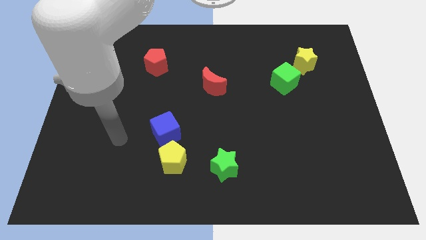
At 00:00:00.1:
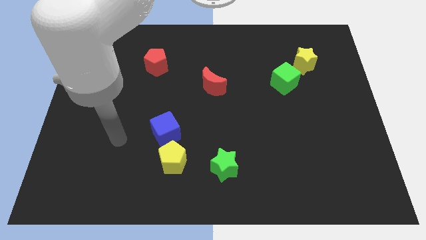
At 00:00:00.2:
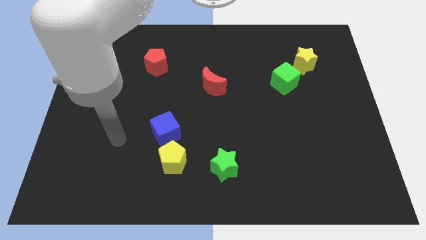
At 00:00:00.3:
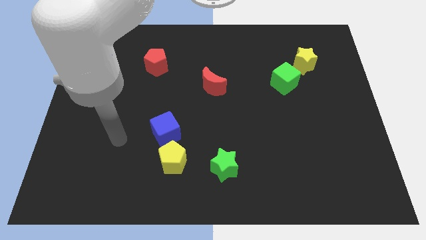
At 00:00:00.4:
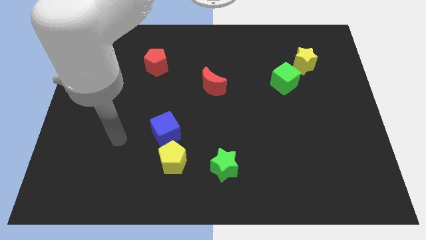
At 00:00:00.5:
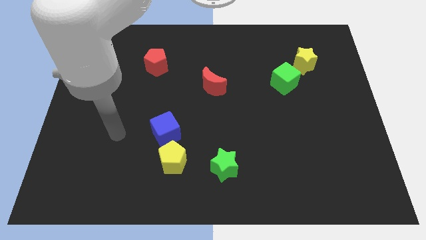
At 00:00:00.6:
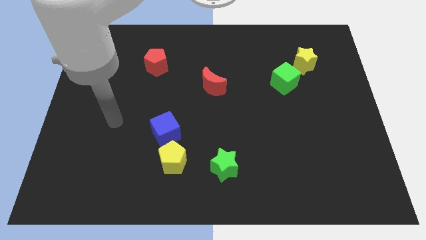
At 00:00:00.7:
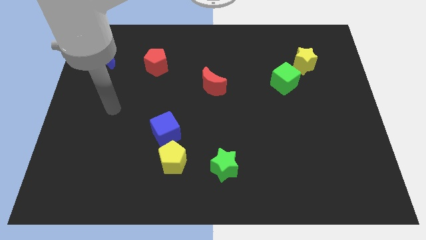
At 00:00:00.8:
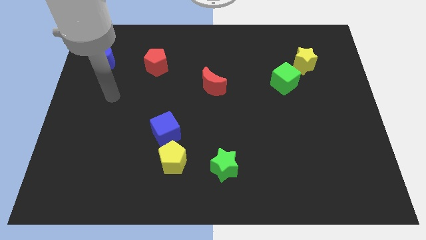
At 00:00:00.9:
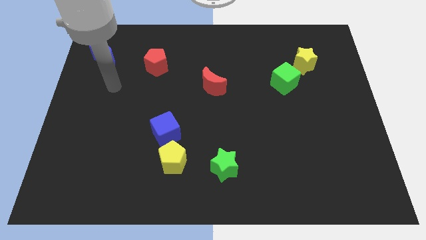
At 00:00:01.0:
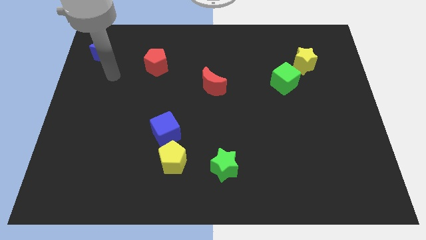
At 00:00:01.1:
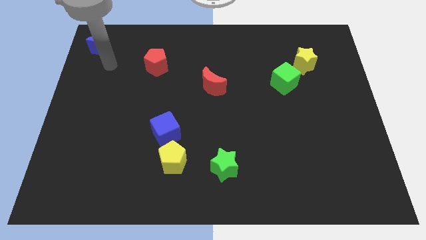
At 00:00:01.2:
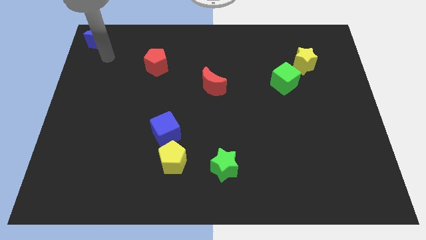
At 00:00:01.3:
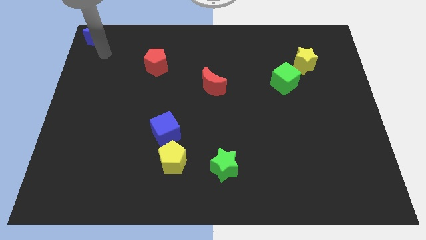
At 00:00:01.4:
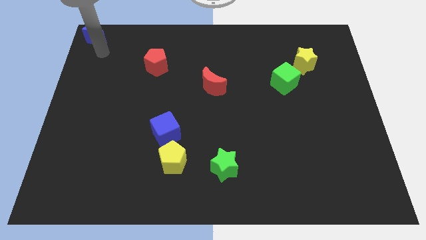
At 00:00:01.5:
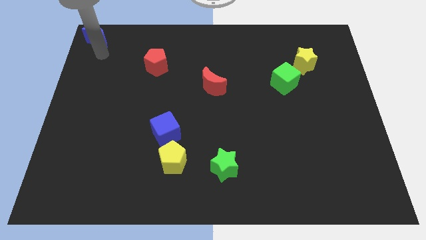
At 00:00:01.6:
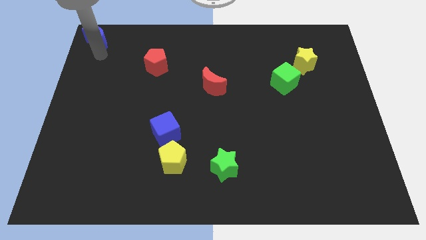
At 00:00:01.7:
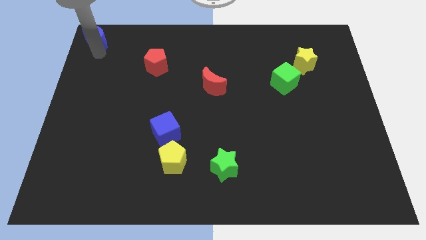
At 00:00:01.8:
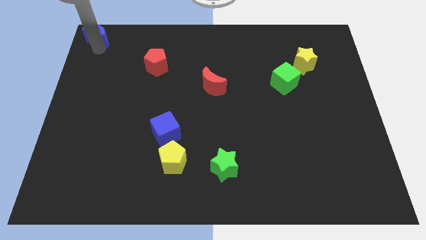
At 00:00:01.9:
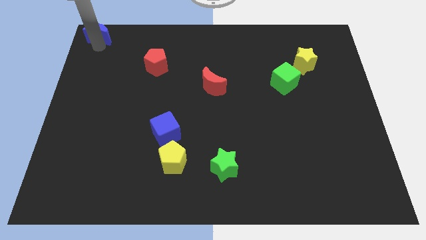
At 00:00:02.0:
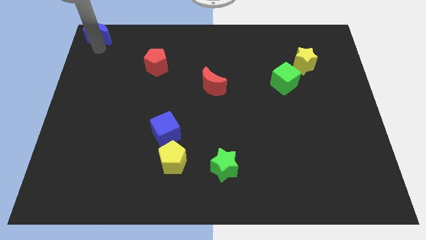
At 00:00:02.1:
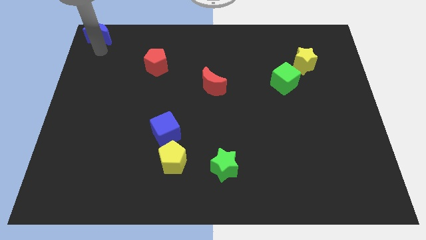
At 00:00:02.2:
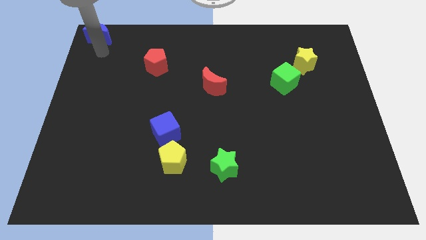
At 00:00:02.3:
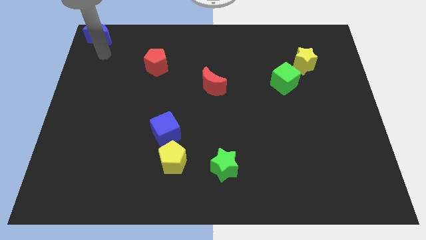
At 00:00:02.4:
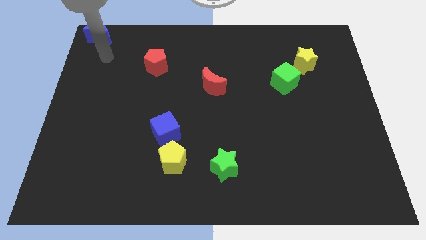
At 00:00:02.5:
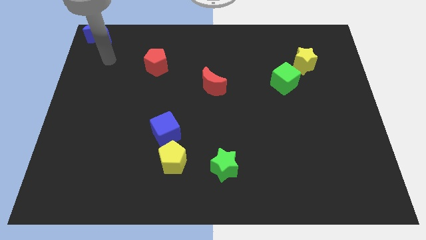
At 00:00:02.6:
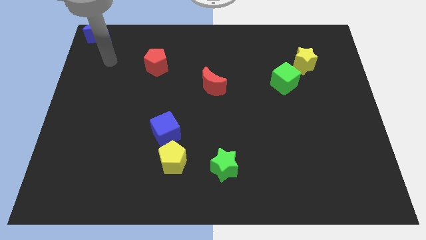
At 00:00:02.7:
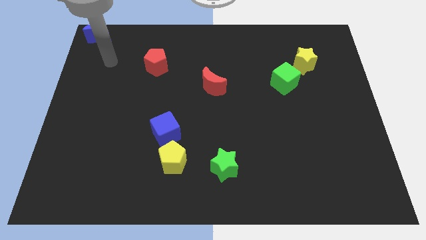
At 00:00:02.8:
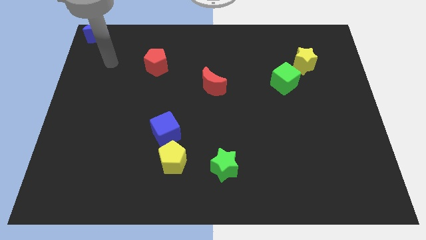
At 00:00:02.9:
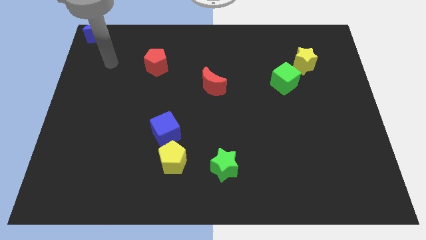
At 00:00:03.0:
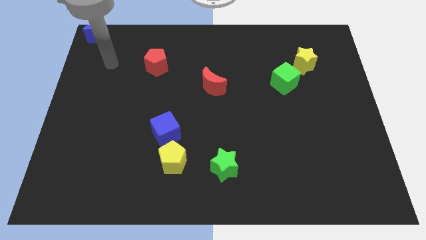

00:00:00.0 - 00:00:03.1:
push the blue moon to the top left corner of the board

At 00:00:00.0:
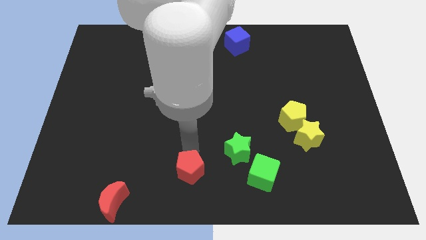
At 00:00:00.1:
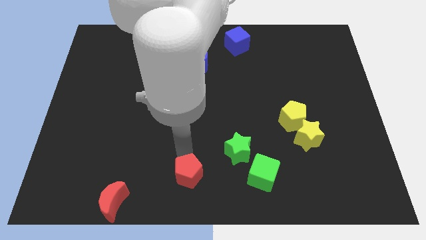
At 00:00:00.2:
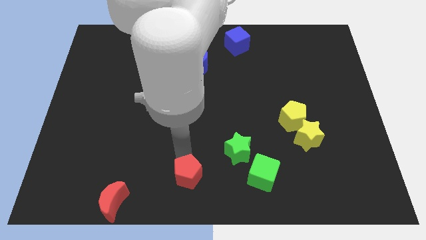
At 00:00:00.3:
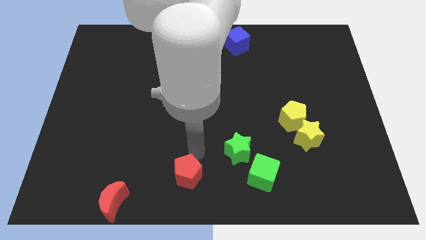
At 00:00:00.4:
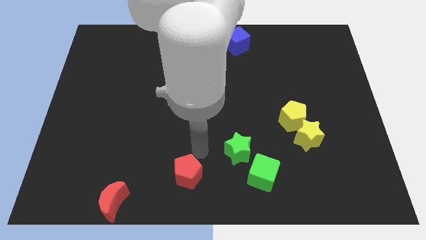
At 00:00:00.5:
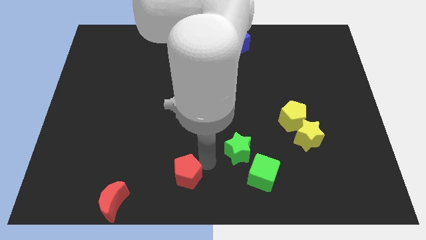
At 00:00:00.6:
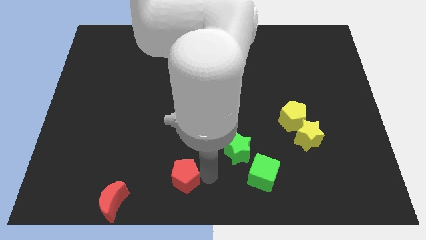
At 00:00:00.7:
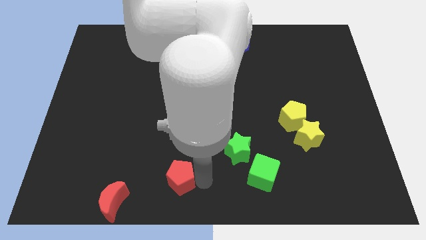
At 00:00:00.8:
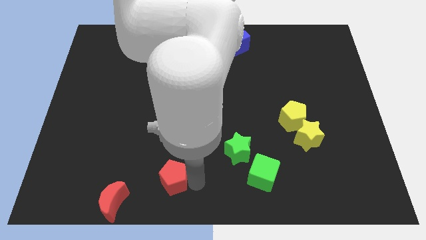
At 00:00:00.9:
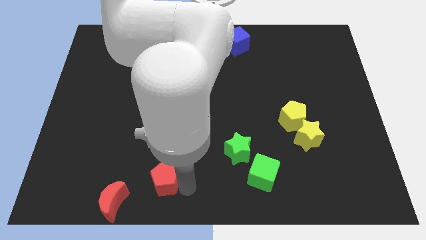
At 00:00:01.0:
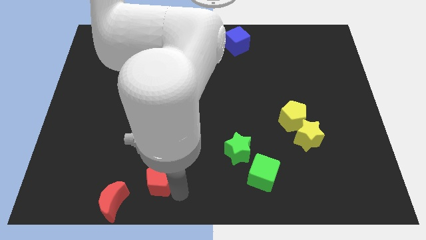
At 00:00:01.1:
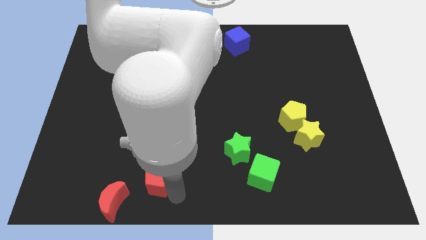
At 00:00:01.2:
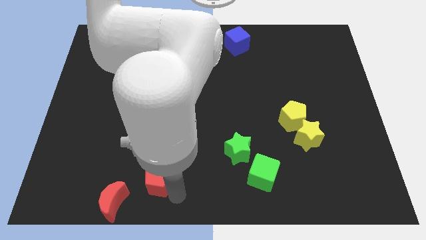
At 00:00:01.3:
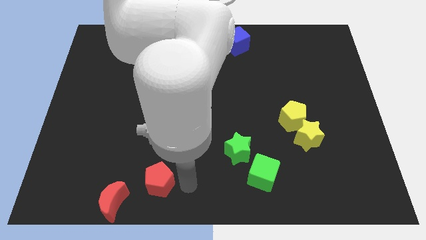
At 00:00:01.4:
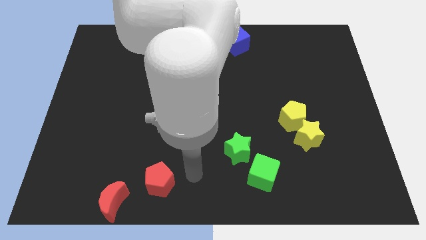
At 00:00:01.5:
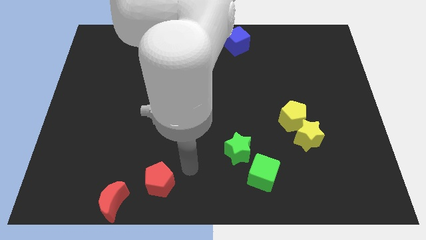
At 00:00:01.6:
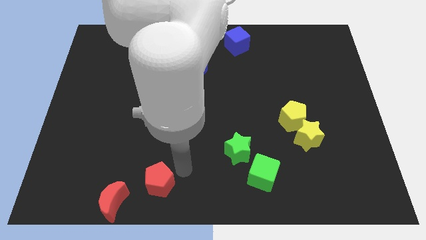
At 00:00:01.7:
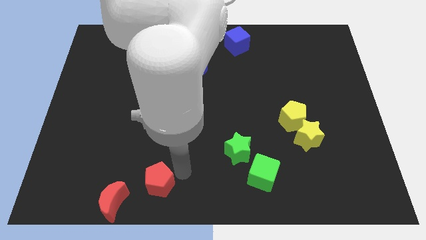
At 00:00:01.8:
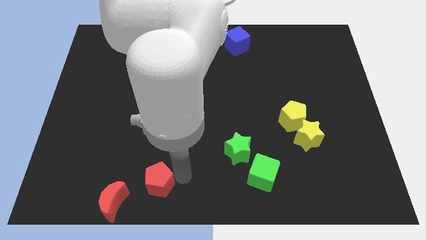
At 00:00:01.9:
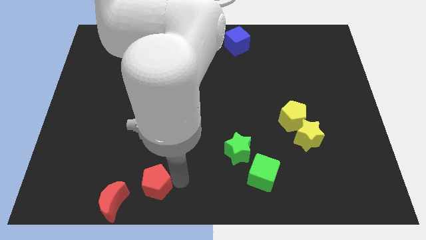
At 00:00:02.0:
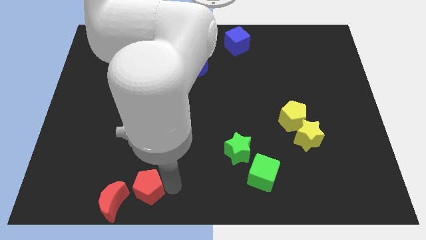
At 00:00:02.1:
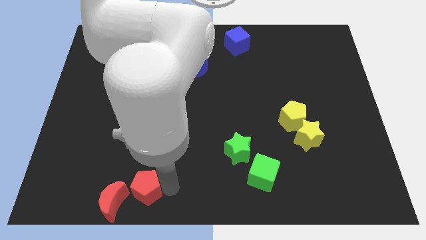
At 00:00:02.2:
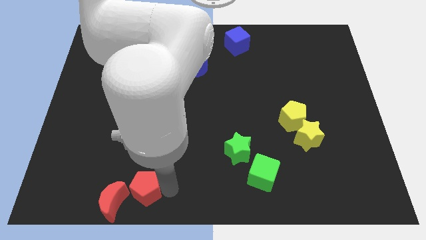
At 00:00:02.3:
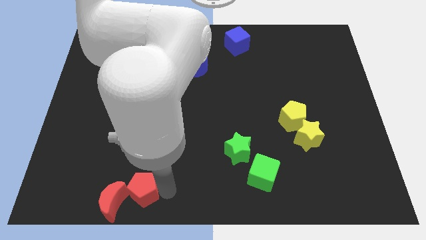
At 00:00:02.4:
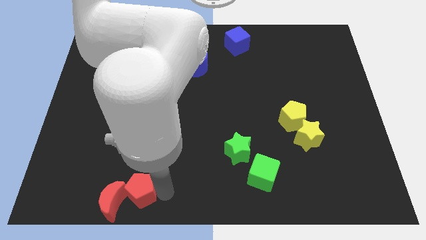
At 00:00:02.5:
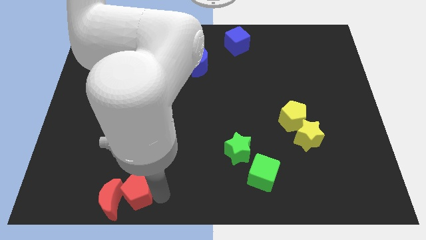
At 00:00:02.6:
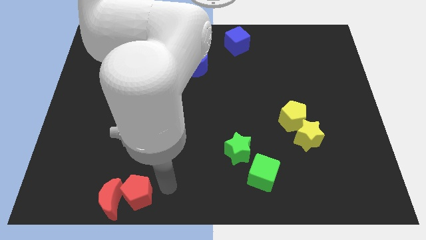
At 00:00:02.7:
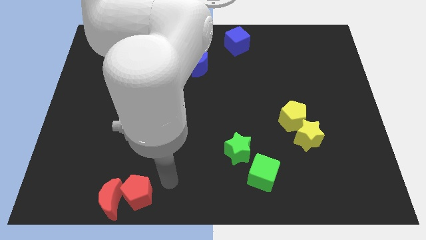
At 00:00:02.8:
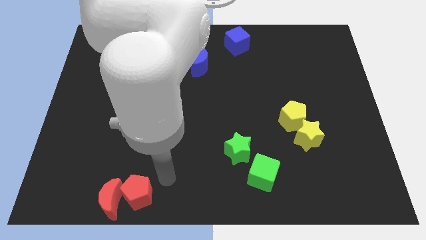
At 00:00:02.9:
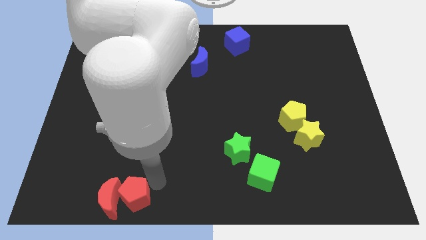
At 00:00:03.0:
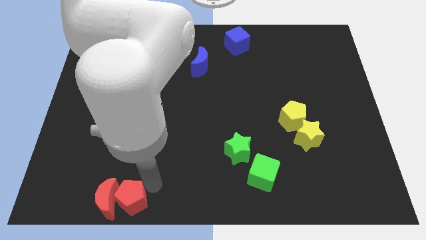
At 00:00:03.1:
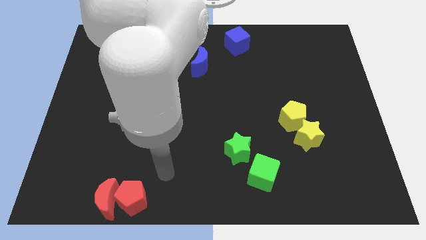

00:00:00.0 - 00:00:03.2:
put the red pentagon at the bottom of the board

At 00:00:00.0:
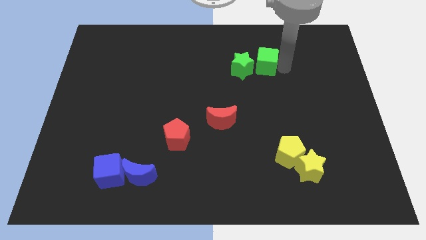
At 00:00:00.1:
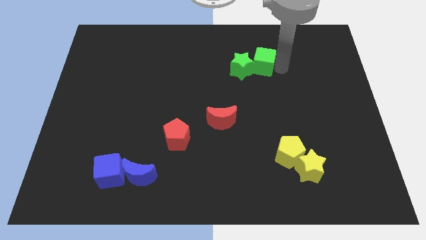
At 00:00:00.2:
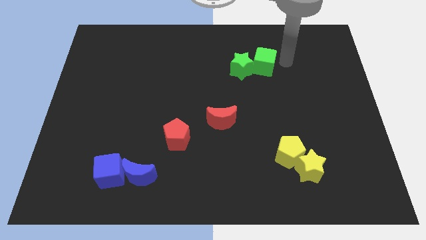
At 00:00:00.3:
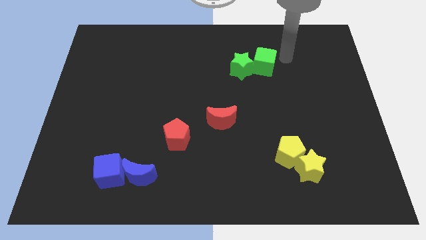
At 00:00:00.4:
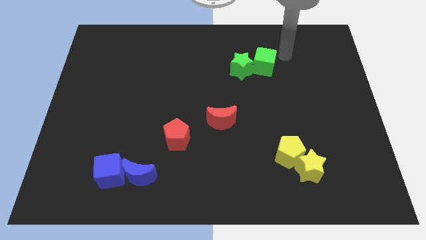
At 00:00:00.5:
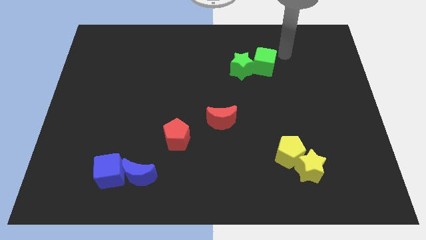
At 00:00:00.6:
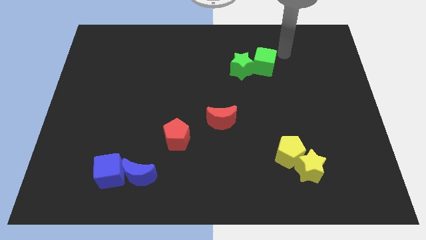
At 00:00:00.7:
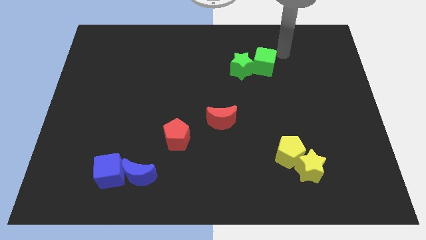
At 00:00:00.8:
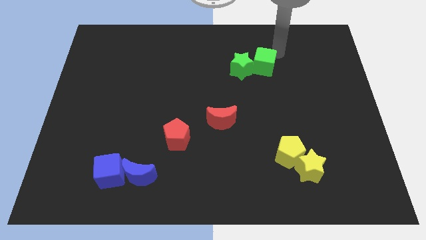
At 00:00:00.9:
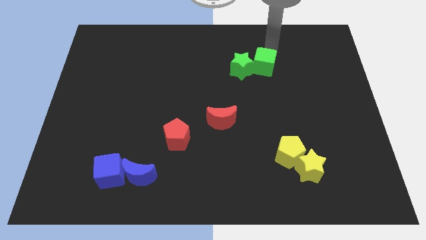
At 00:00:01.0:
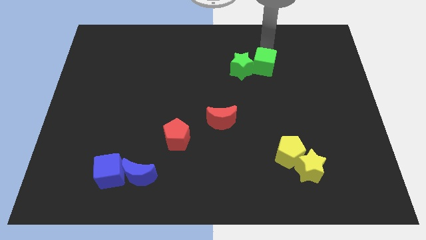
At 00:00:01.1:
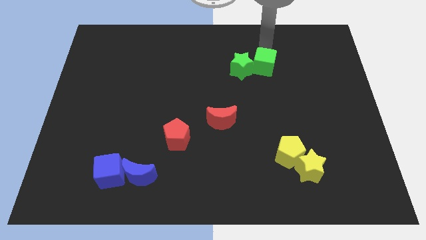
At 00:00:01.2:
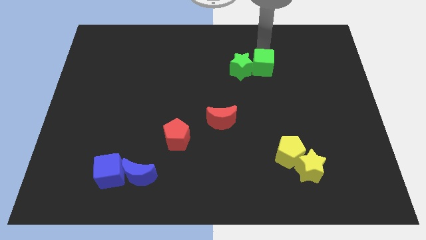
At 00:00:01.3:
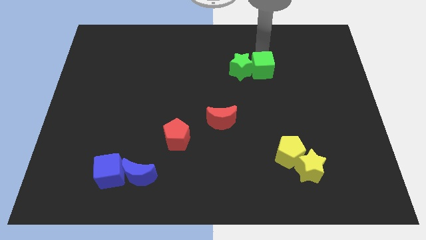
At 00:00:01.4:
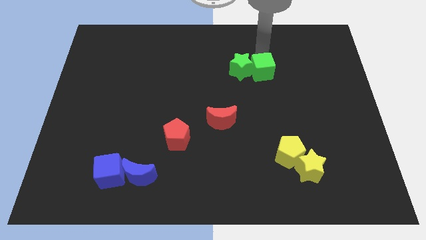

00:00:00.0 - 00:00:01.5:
push green star in to green star

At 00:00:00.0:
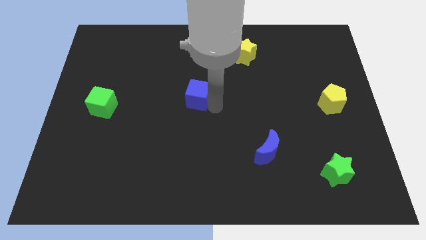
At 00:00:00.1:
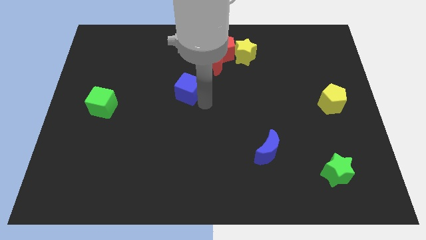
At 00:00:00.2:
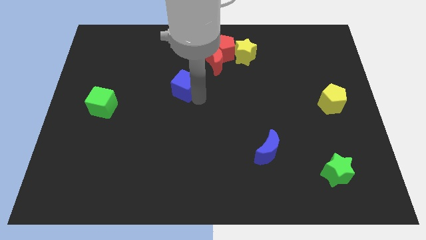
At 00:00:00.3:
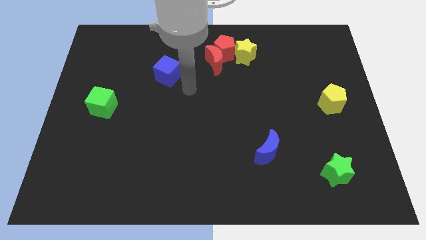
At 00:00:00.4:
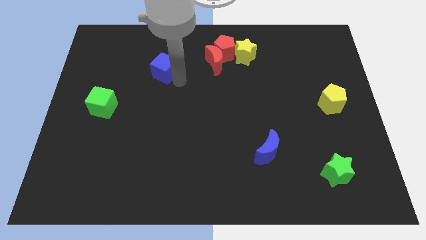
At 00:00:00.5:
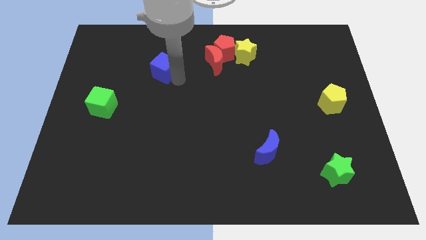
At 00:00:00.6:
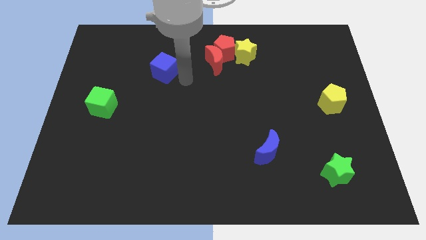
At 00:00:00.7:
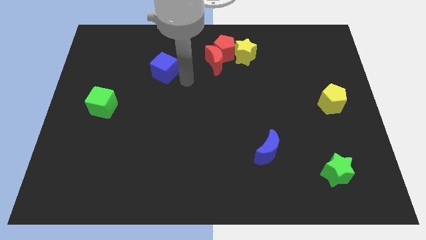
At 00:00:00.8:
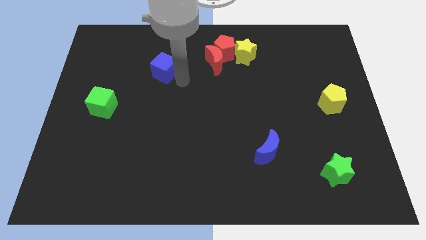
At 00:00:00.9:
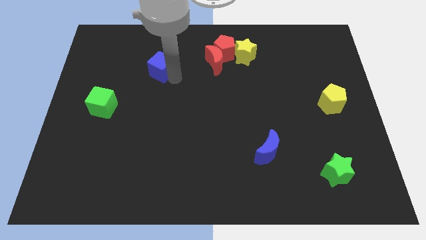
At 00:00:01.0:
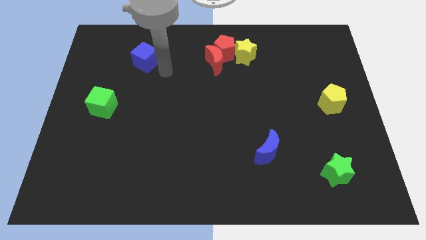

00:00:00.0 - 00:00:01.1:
move the blue cube diagonally towards the top left
